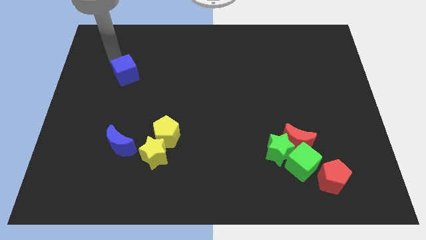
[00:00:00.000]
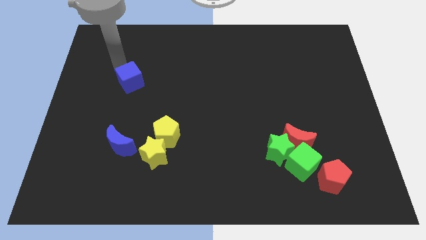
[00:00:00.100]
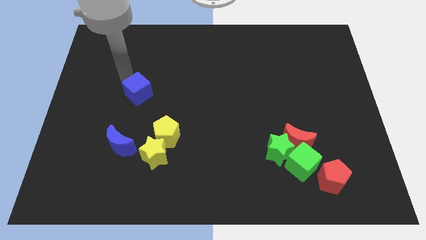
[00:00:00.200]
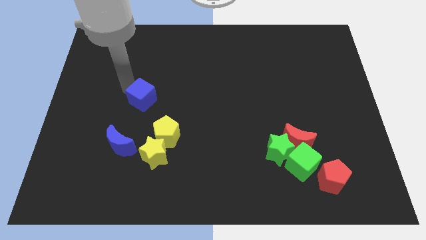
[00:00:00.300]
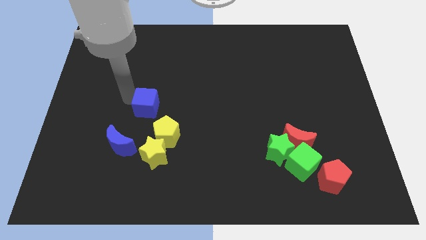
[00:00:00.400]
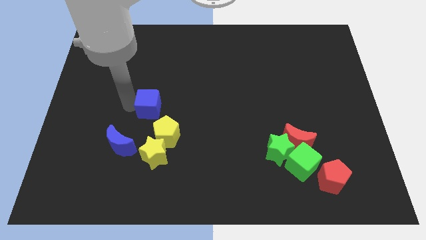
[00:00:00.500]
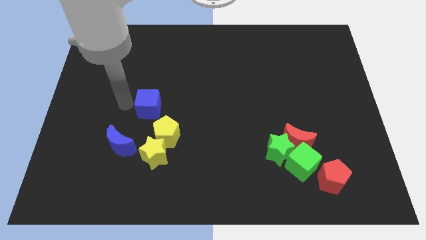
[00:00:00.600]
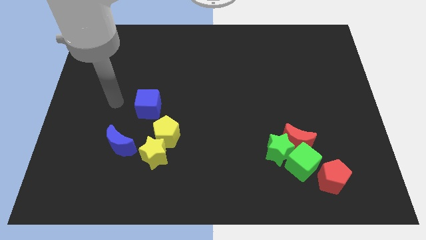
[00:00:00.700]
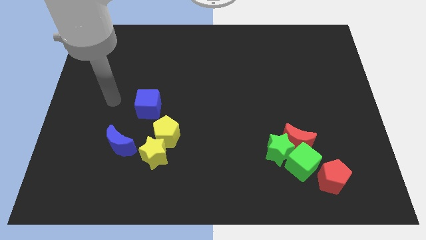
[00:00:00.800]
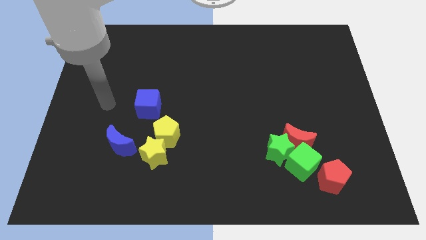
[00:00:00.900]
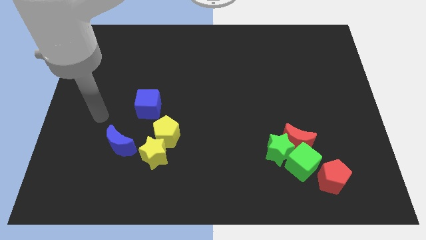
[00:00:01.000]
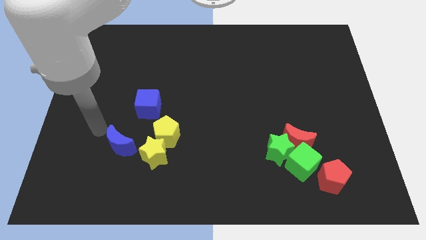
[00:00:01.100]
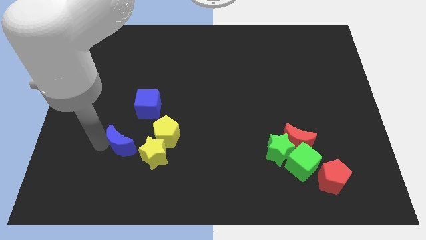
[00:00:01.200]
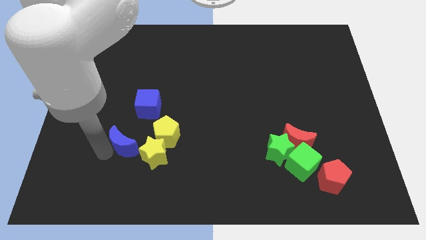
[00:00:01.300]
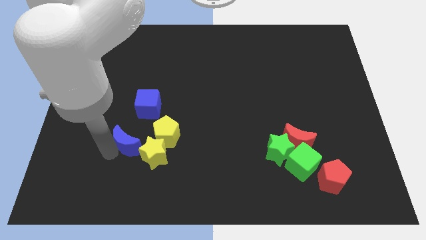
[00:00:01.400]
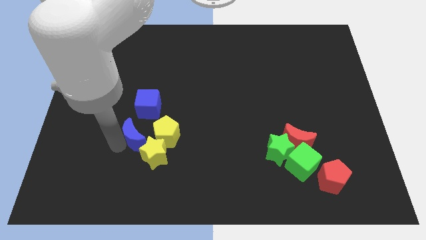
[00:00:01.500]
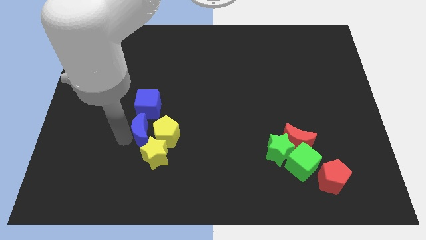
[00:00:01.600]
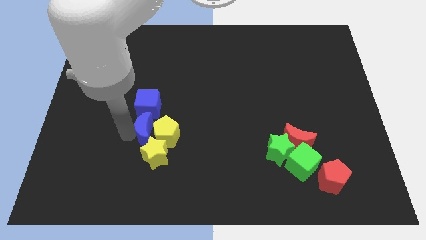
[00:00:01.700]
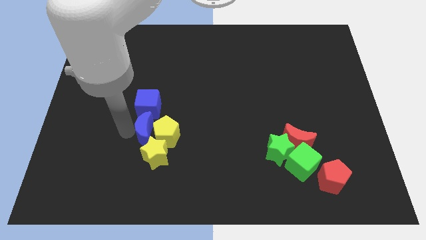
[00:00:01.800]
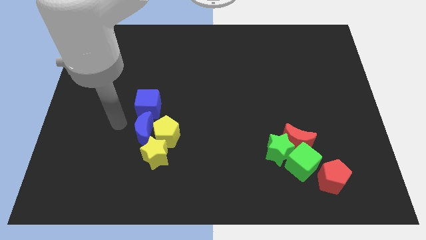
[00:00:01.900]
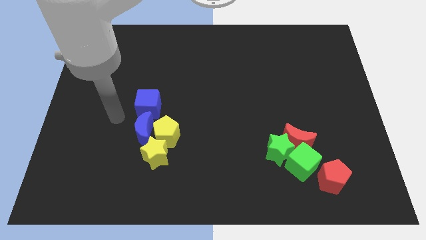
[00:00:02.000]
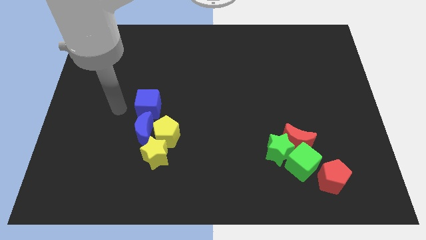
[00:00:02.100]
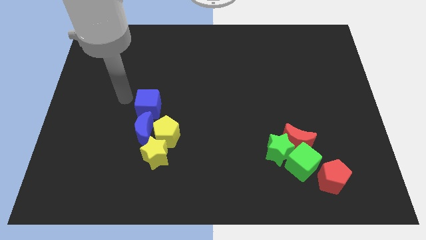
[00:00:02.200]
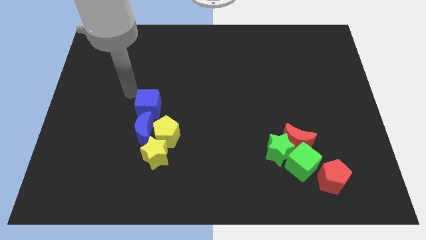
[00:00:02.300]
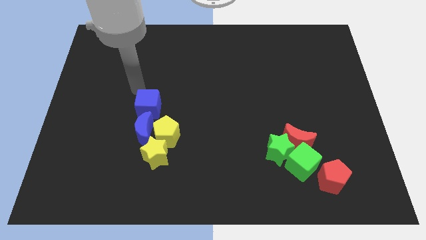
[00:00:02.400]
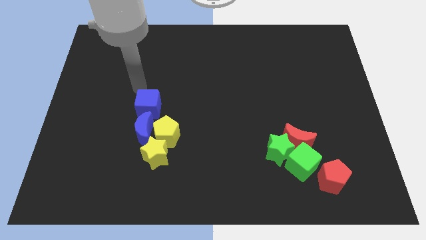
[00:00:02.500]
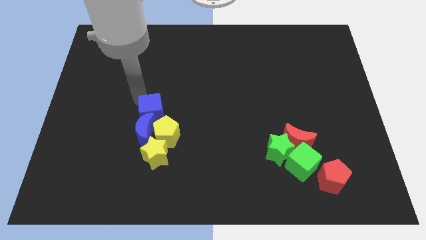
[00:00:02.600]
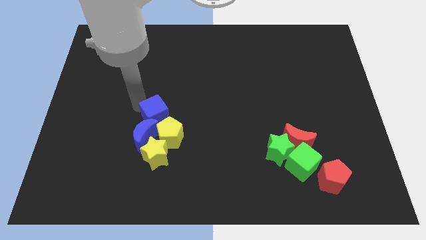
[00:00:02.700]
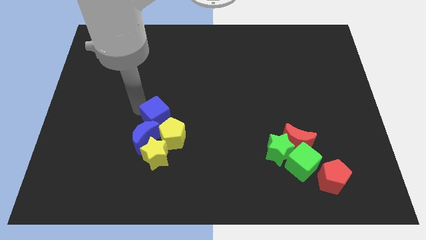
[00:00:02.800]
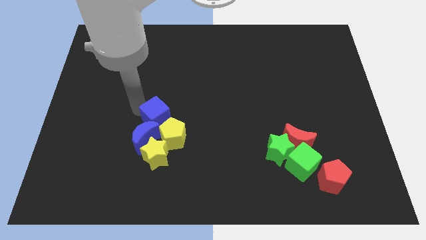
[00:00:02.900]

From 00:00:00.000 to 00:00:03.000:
push the blue cube into the yellow pentagon

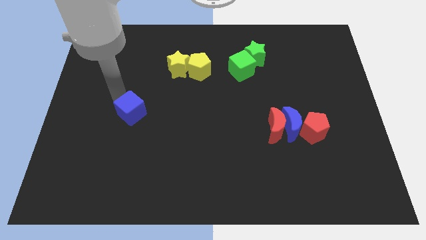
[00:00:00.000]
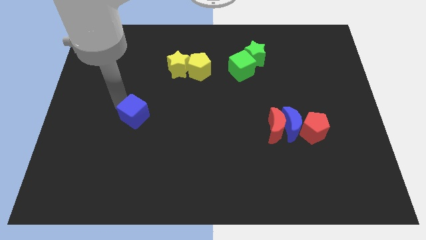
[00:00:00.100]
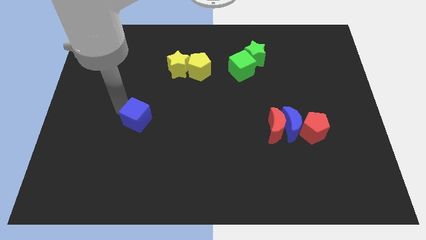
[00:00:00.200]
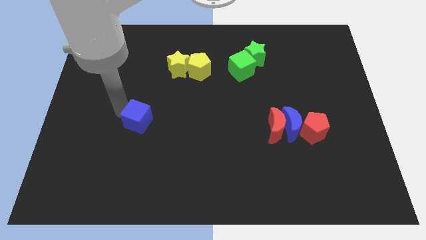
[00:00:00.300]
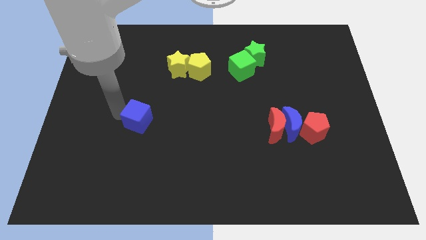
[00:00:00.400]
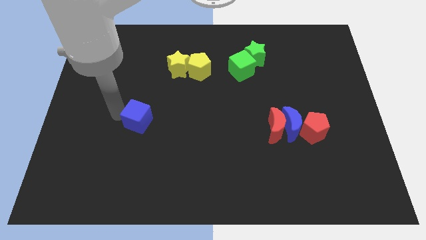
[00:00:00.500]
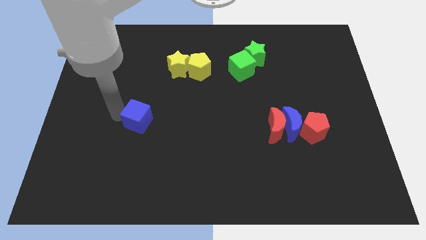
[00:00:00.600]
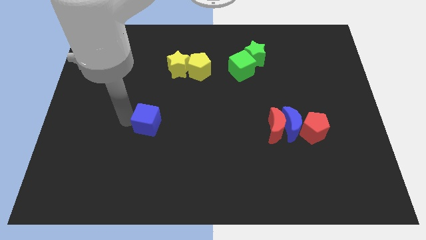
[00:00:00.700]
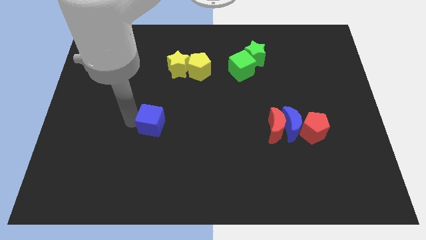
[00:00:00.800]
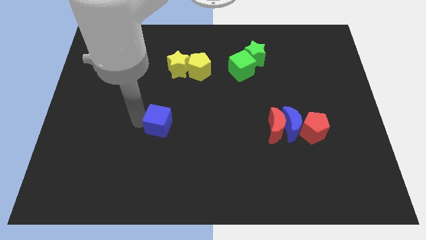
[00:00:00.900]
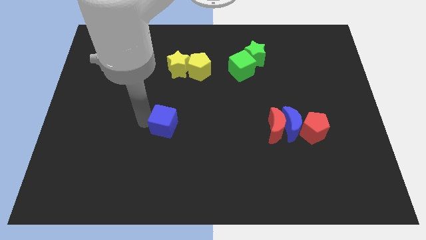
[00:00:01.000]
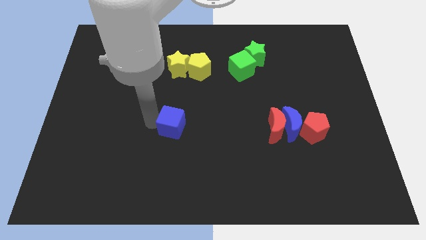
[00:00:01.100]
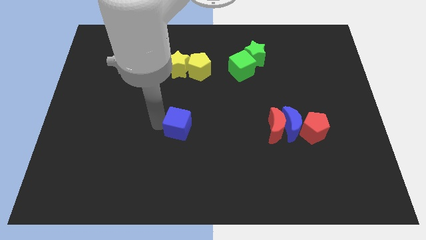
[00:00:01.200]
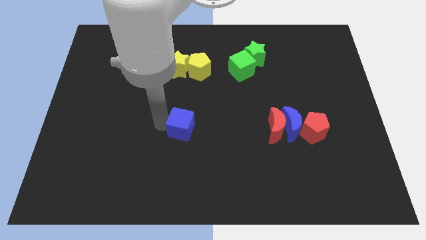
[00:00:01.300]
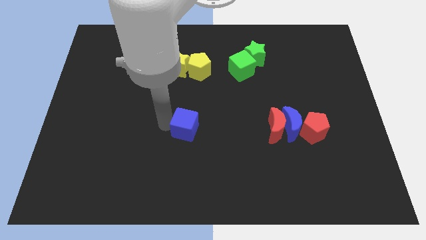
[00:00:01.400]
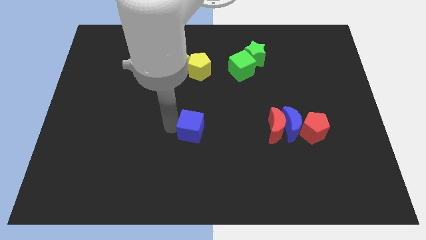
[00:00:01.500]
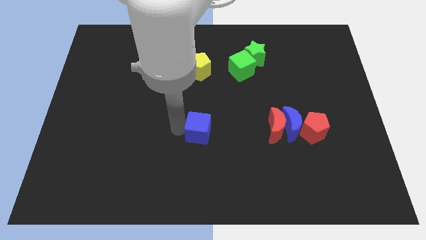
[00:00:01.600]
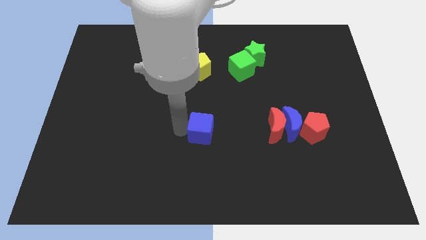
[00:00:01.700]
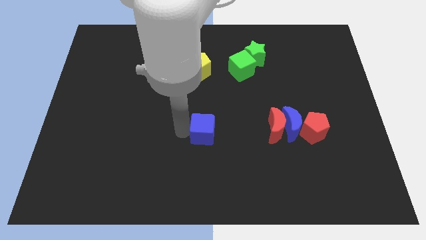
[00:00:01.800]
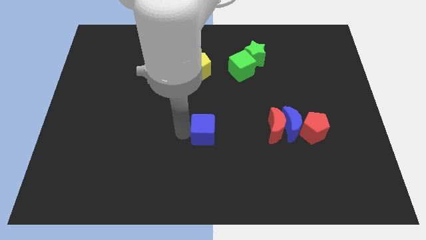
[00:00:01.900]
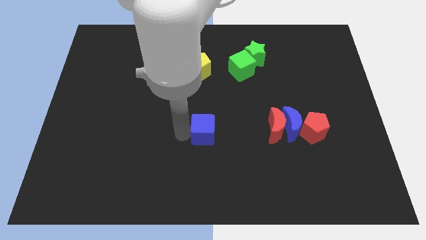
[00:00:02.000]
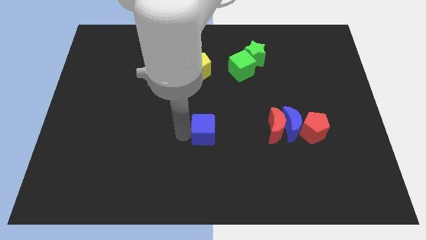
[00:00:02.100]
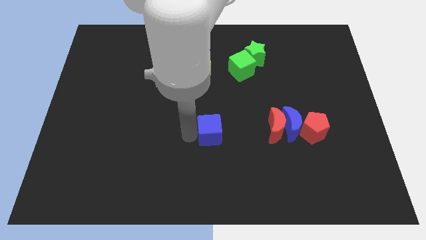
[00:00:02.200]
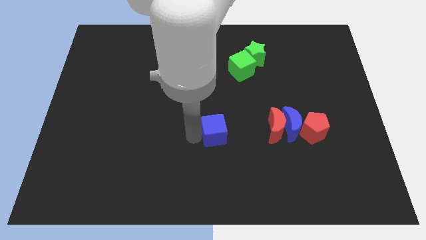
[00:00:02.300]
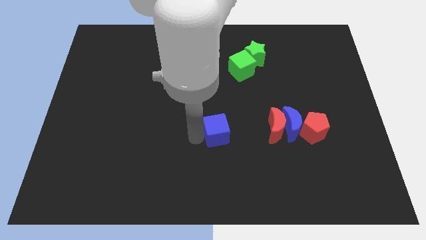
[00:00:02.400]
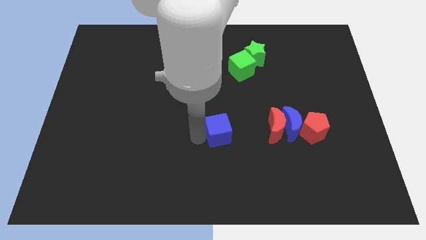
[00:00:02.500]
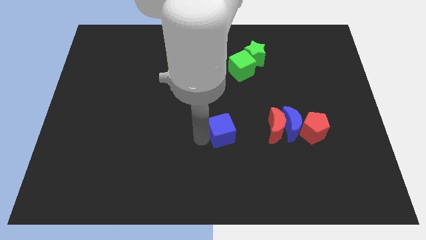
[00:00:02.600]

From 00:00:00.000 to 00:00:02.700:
push the blue cube parallel to the left of the red crescent

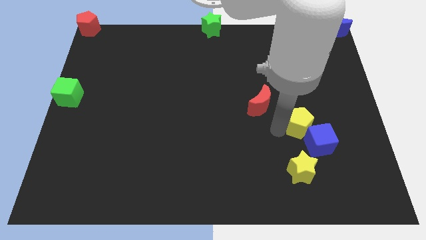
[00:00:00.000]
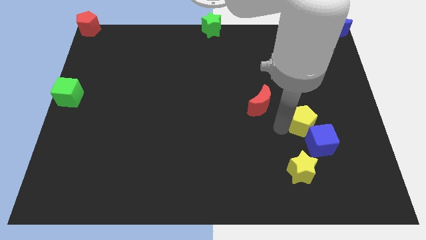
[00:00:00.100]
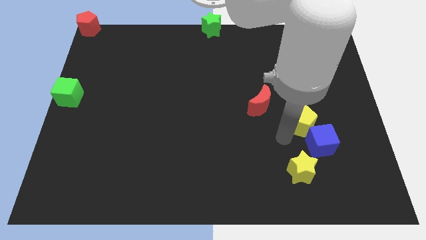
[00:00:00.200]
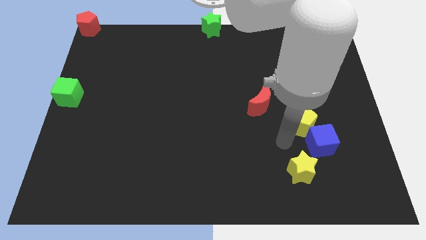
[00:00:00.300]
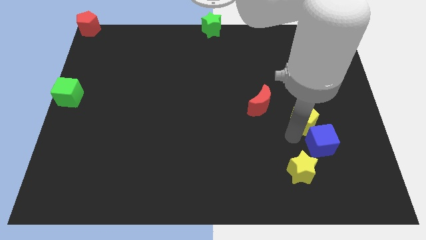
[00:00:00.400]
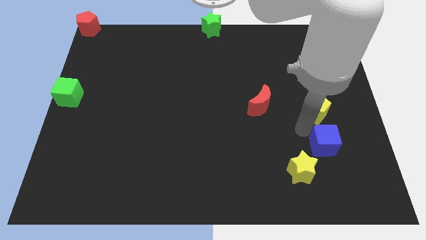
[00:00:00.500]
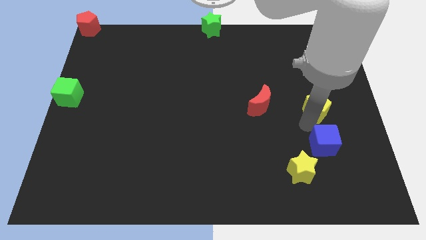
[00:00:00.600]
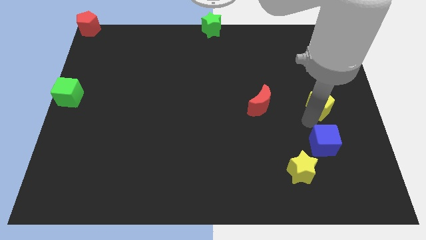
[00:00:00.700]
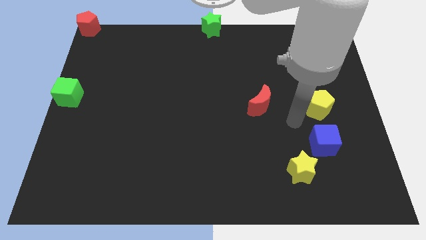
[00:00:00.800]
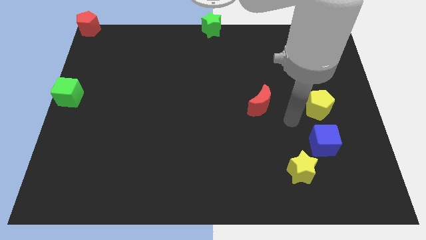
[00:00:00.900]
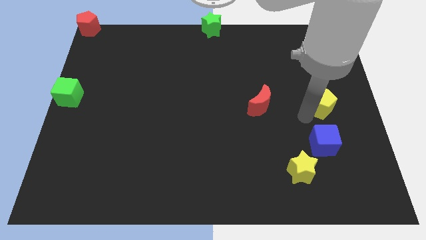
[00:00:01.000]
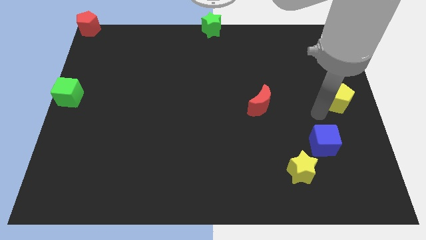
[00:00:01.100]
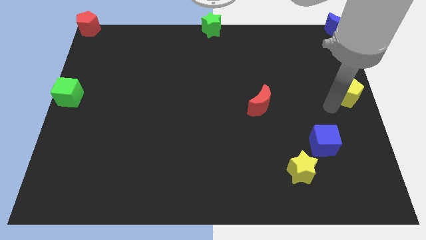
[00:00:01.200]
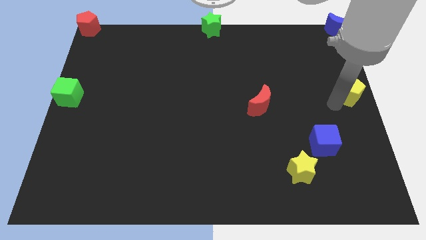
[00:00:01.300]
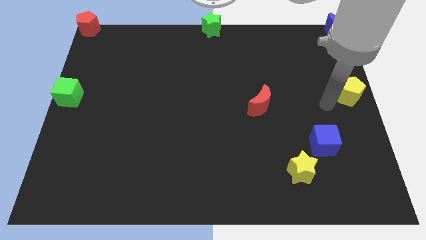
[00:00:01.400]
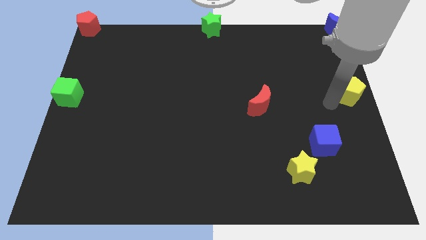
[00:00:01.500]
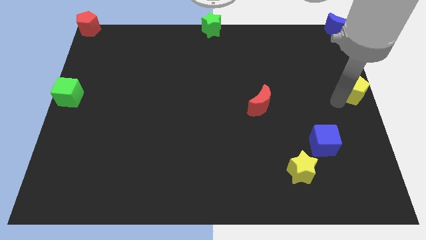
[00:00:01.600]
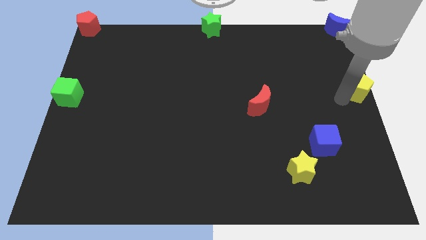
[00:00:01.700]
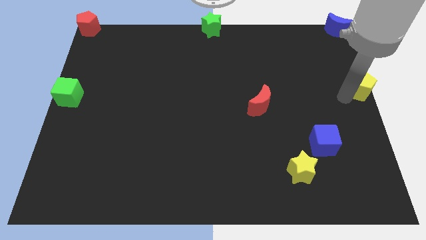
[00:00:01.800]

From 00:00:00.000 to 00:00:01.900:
place the yellow pentagon at the center right side of the board

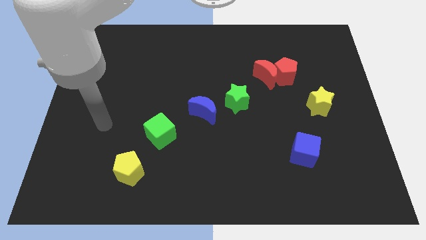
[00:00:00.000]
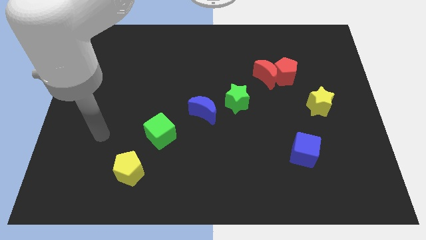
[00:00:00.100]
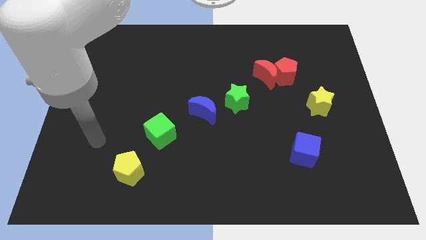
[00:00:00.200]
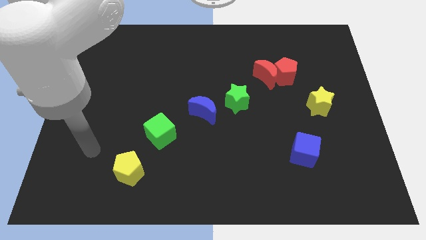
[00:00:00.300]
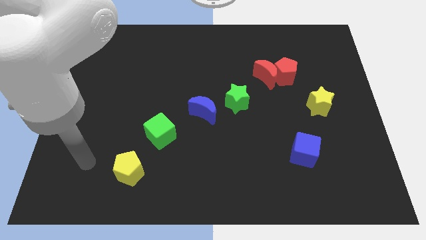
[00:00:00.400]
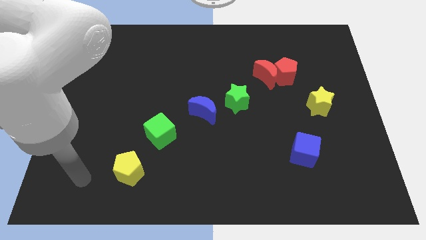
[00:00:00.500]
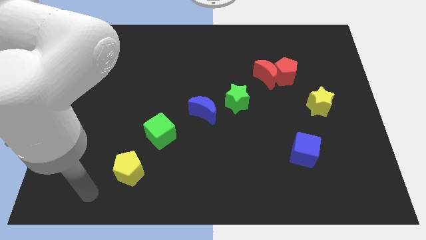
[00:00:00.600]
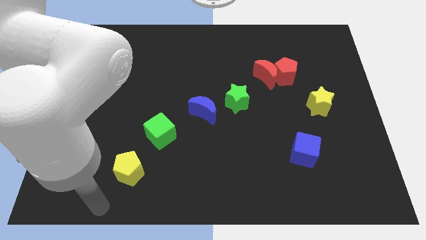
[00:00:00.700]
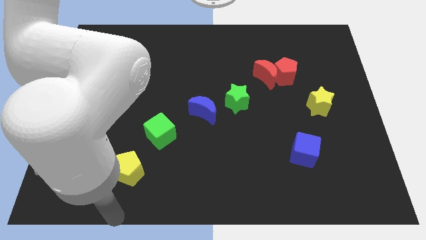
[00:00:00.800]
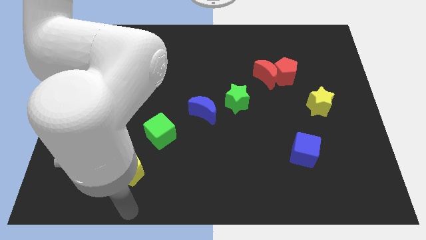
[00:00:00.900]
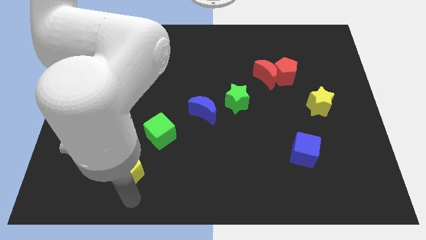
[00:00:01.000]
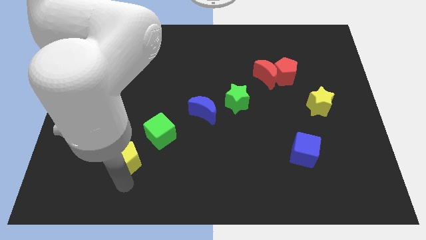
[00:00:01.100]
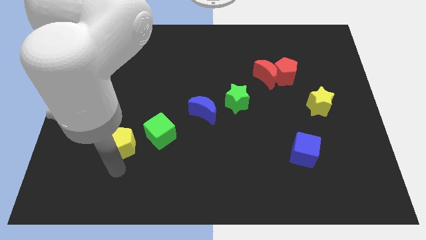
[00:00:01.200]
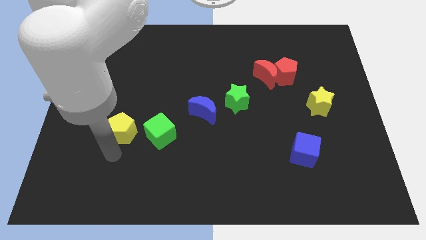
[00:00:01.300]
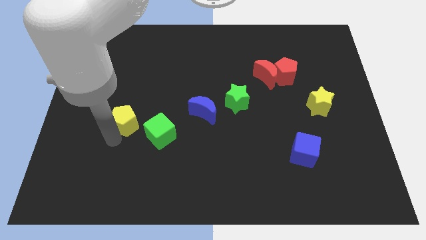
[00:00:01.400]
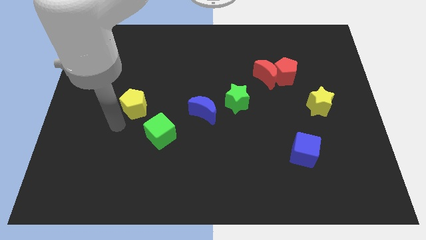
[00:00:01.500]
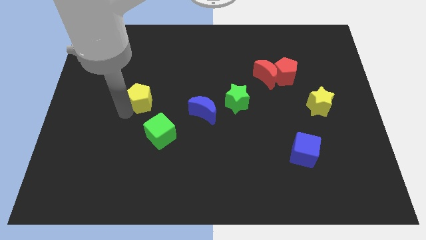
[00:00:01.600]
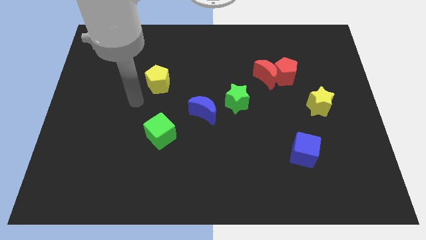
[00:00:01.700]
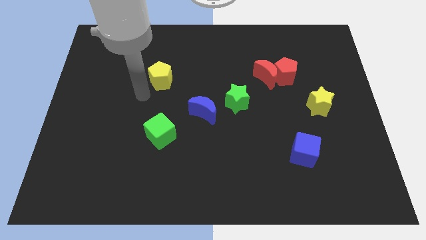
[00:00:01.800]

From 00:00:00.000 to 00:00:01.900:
push the yellow pentagon on the top of the green cube vertically
